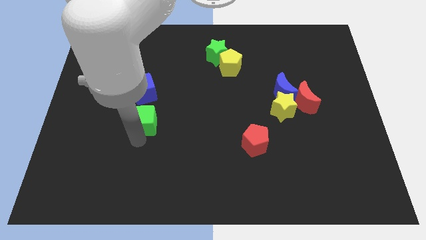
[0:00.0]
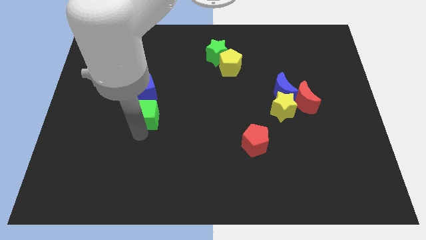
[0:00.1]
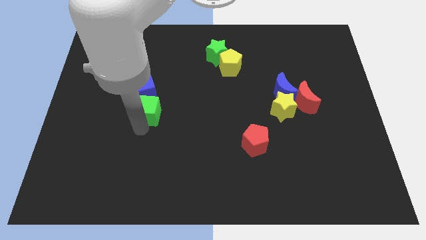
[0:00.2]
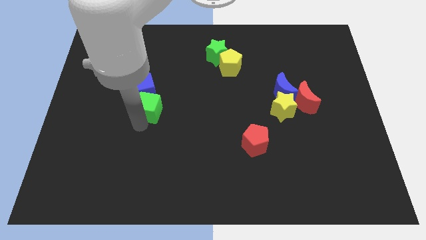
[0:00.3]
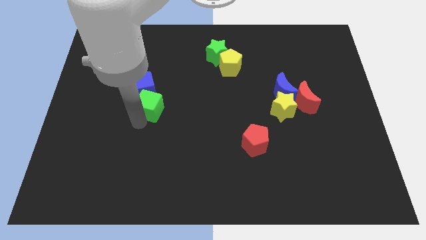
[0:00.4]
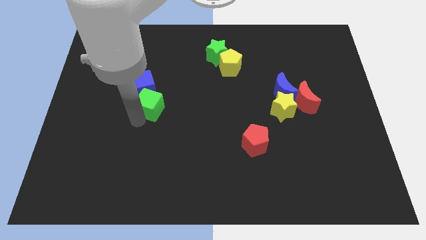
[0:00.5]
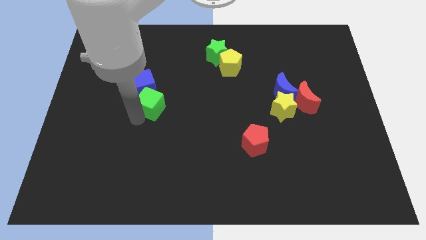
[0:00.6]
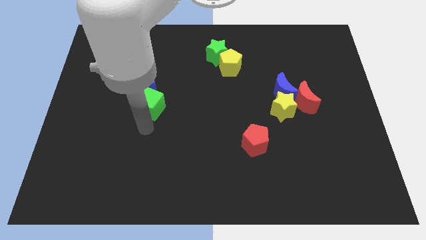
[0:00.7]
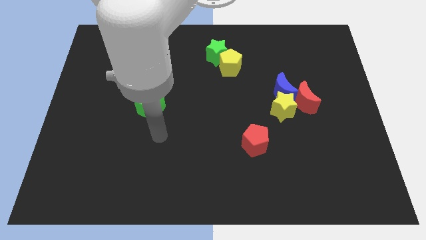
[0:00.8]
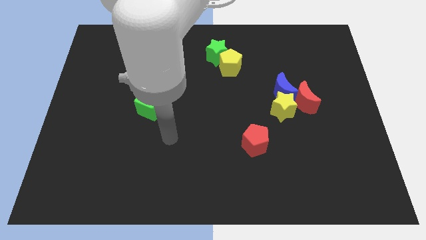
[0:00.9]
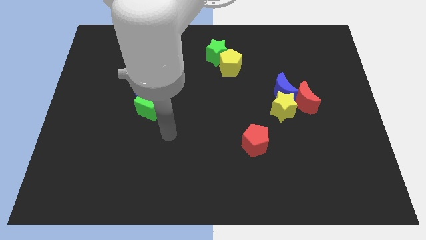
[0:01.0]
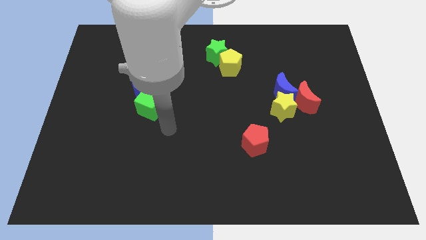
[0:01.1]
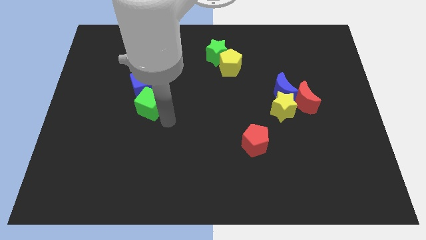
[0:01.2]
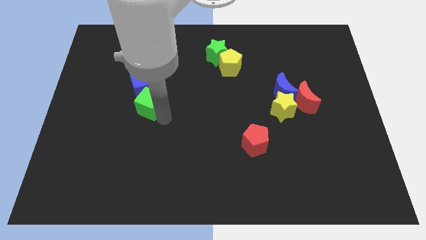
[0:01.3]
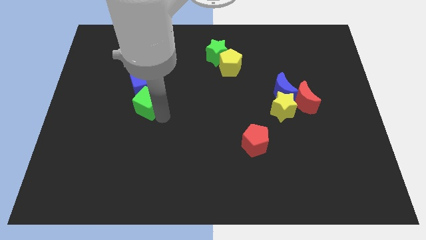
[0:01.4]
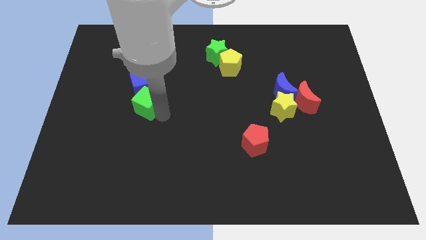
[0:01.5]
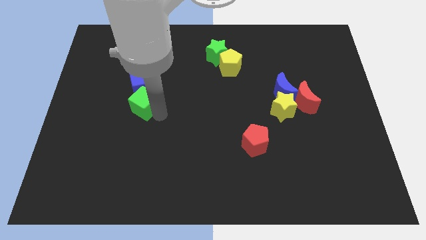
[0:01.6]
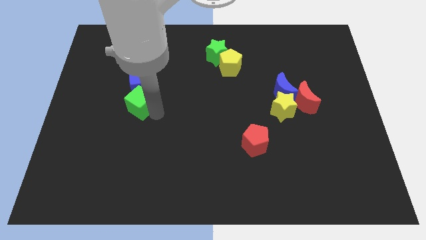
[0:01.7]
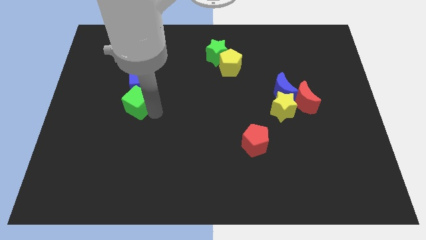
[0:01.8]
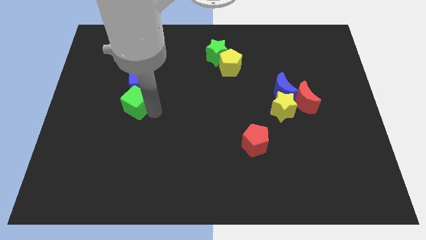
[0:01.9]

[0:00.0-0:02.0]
push the green cube towards the blue cube

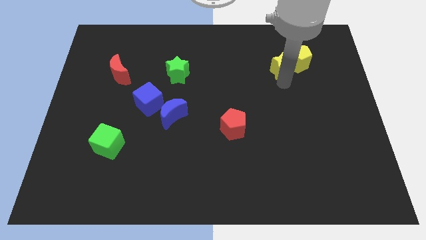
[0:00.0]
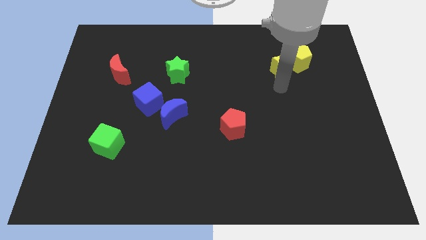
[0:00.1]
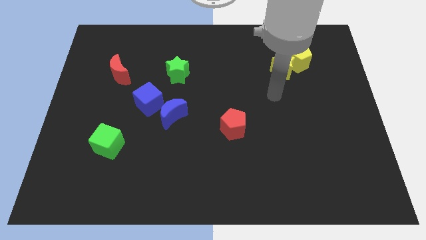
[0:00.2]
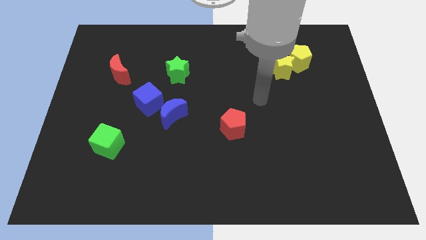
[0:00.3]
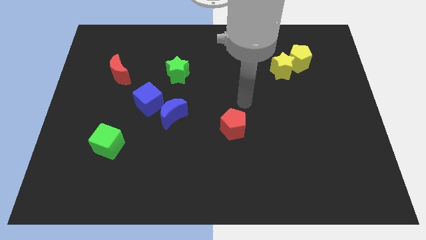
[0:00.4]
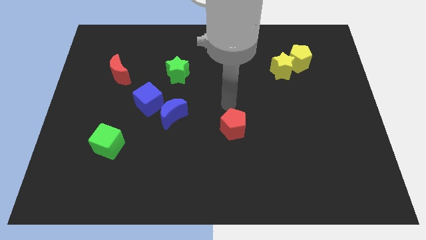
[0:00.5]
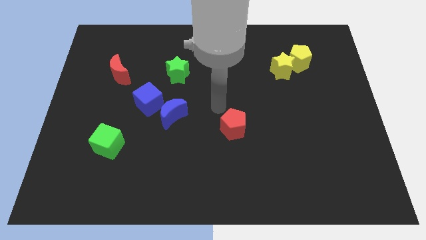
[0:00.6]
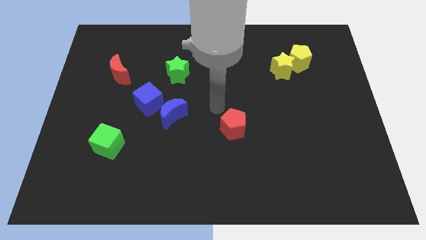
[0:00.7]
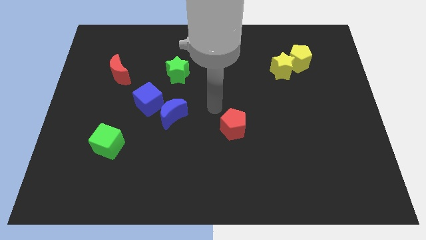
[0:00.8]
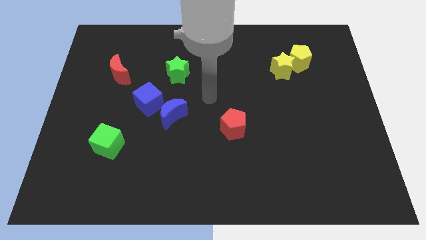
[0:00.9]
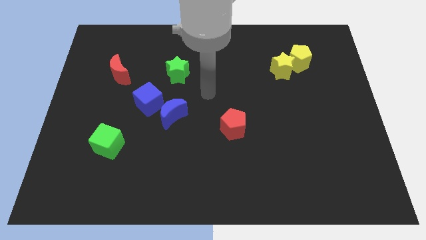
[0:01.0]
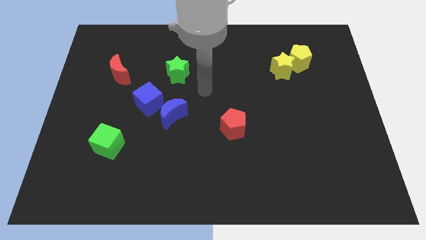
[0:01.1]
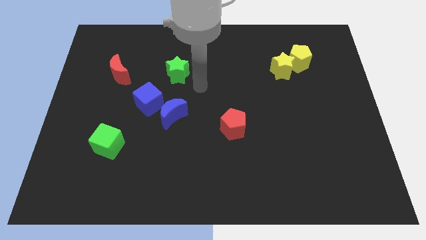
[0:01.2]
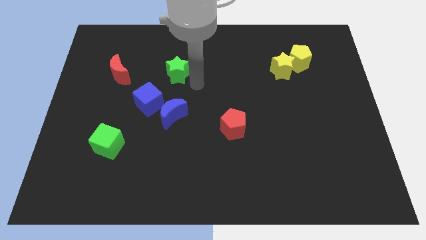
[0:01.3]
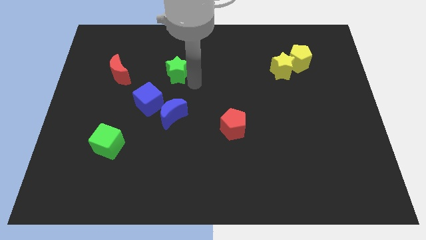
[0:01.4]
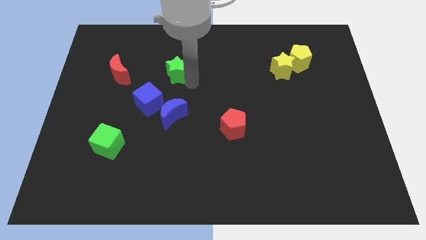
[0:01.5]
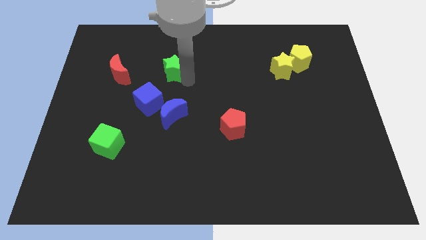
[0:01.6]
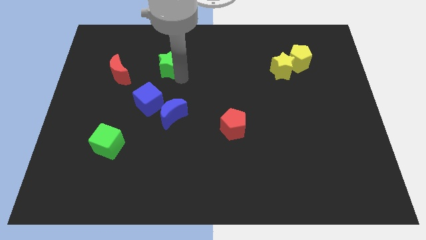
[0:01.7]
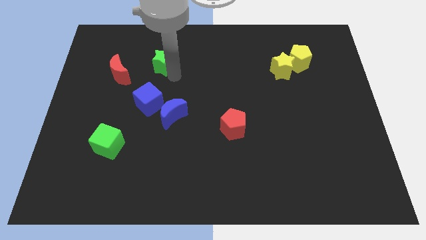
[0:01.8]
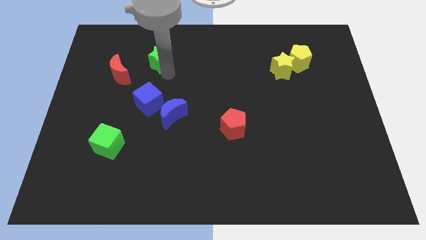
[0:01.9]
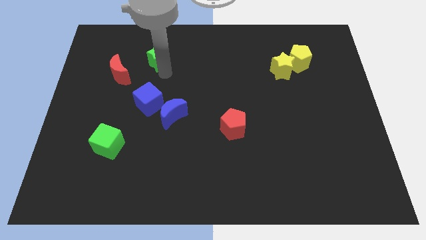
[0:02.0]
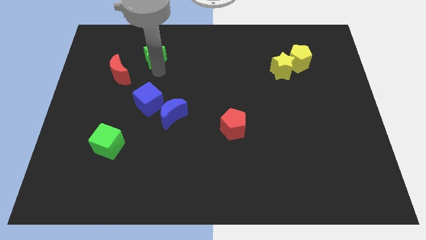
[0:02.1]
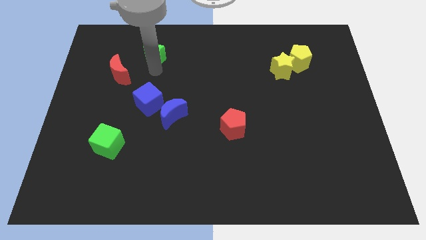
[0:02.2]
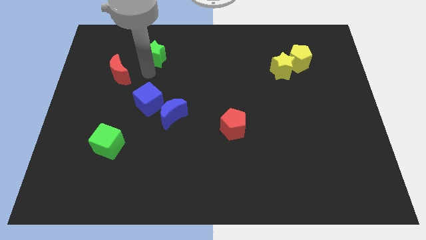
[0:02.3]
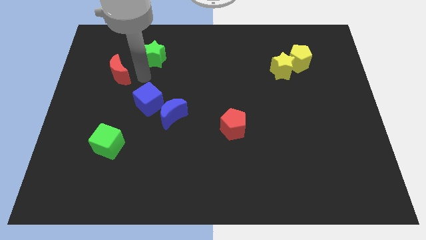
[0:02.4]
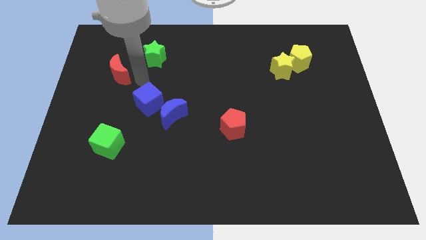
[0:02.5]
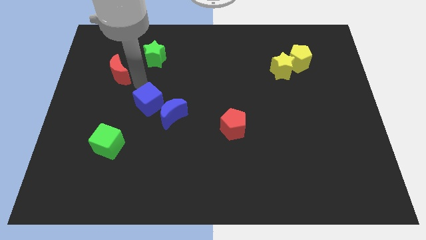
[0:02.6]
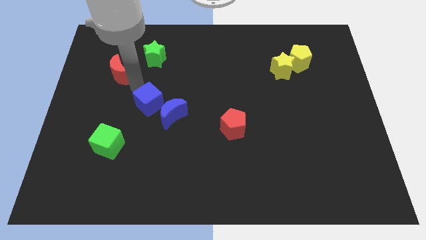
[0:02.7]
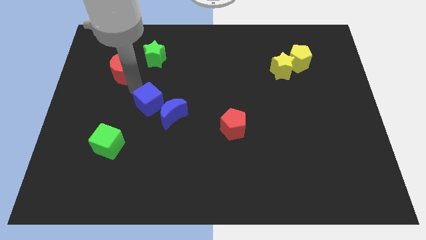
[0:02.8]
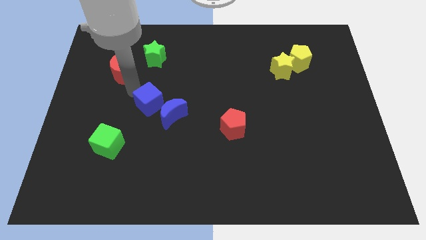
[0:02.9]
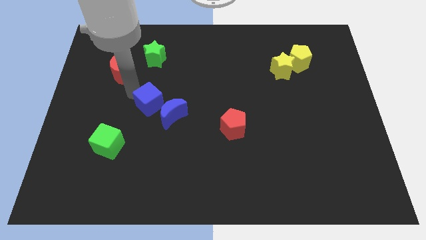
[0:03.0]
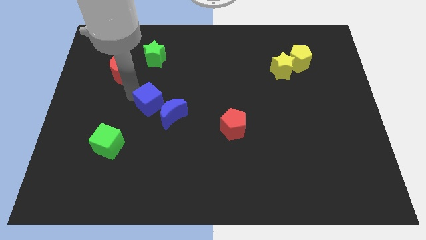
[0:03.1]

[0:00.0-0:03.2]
place the green star vertically above the top side of the blue cube

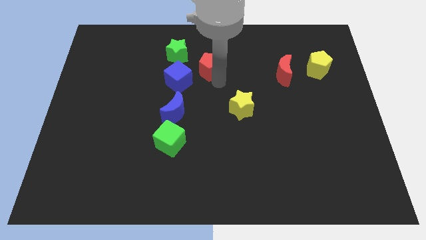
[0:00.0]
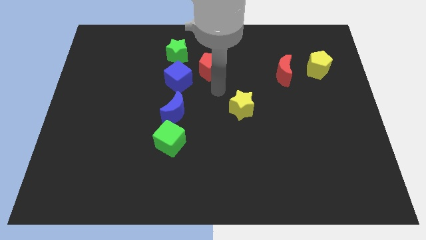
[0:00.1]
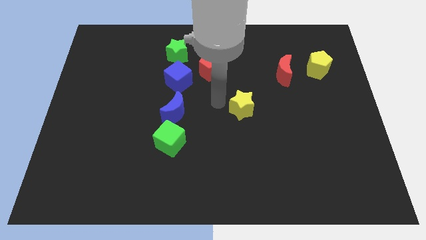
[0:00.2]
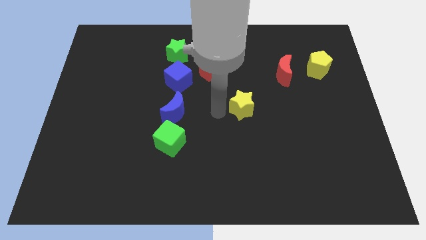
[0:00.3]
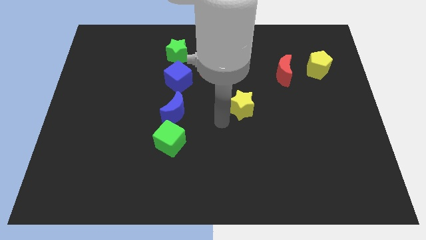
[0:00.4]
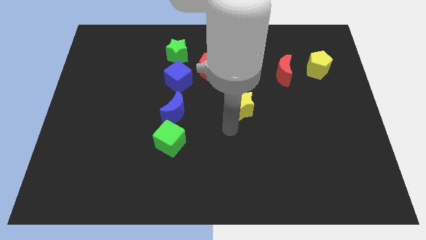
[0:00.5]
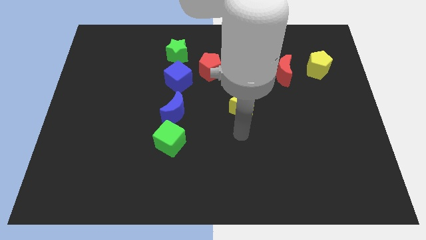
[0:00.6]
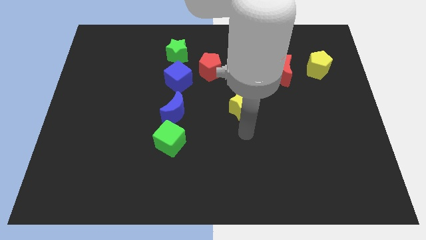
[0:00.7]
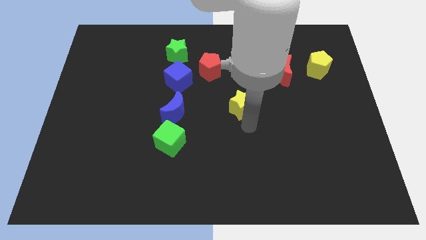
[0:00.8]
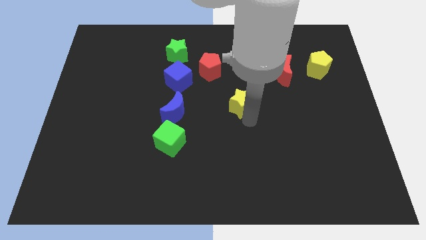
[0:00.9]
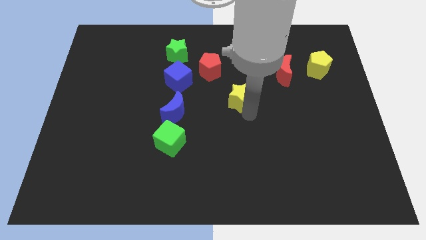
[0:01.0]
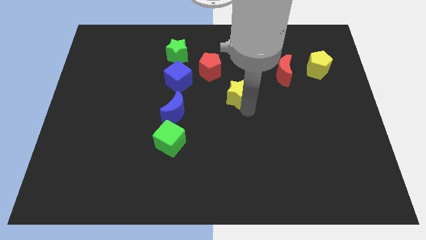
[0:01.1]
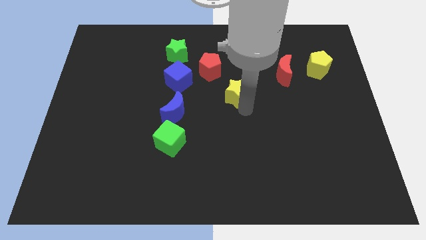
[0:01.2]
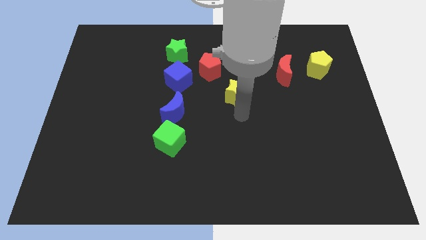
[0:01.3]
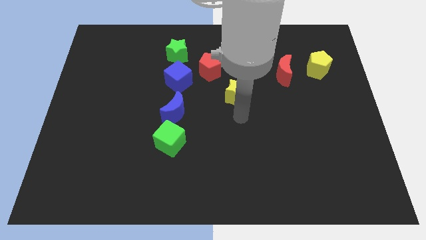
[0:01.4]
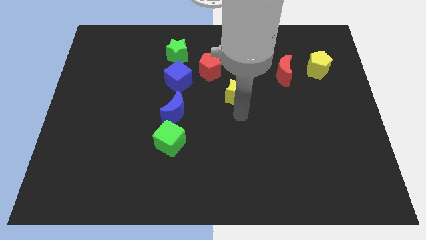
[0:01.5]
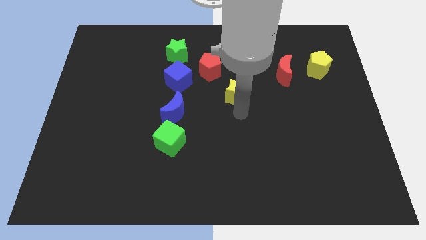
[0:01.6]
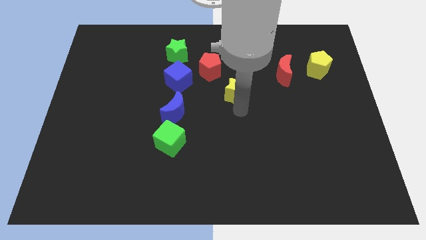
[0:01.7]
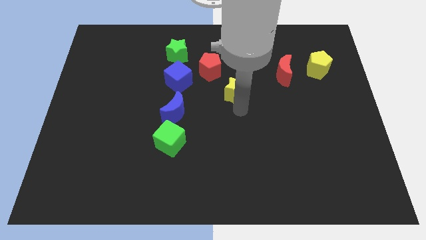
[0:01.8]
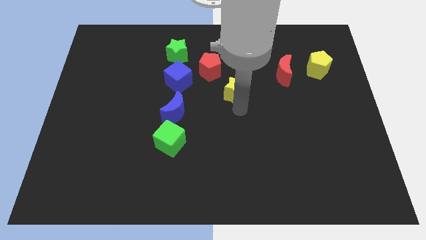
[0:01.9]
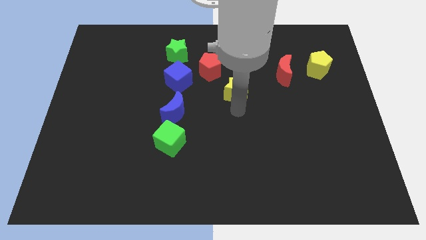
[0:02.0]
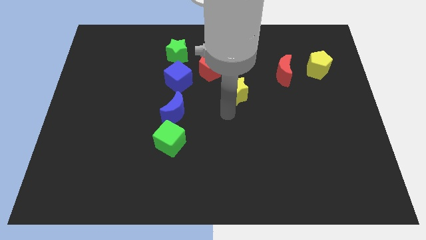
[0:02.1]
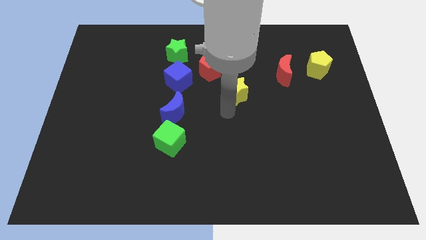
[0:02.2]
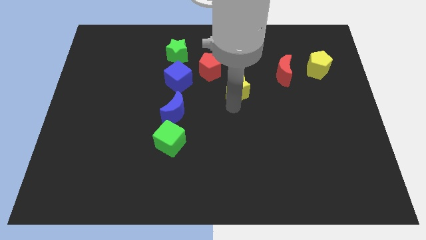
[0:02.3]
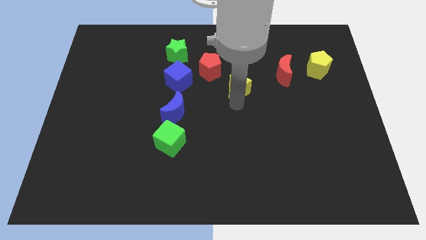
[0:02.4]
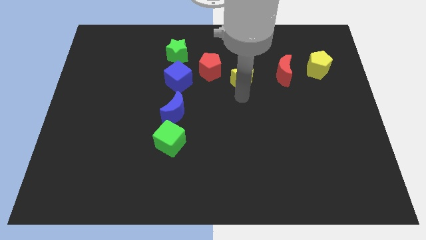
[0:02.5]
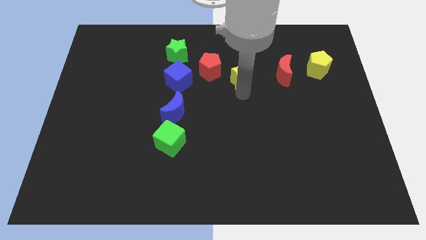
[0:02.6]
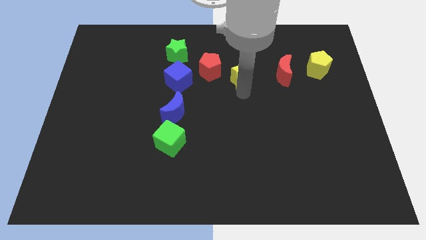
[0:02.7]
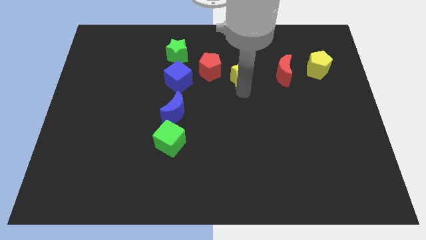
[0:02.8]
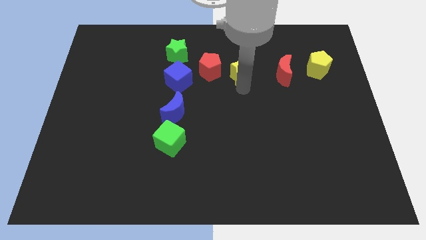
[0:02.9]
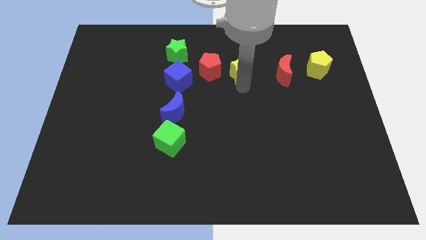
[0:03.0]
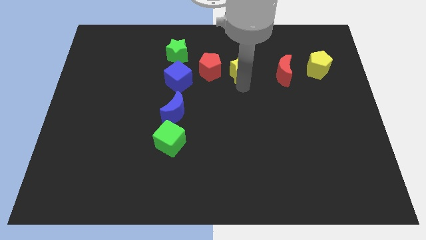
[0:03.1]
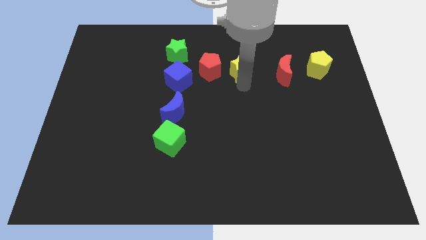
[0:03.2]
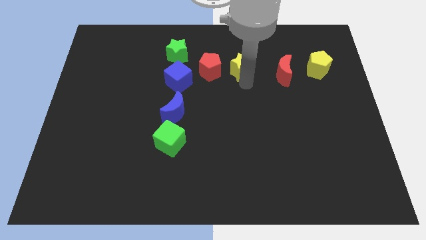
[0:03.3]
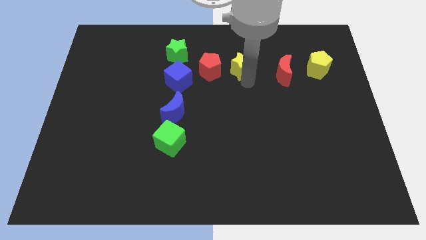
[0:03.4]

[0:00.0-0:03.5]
push the yellow star to the right of the red pentagon

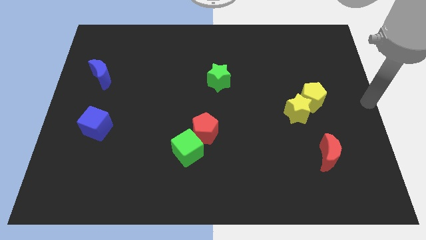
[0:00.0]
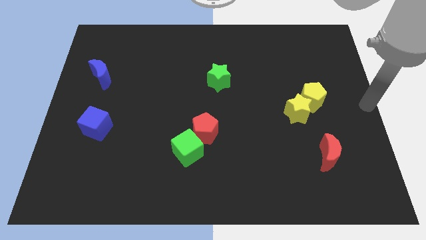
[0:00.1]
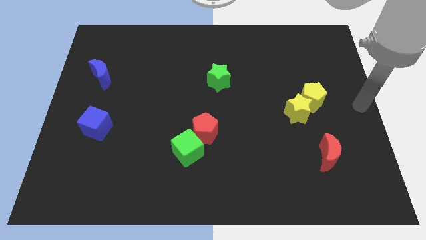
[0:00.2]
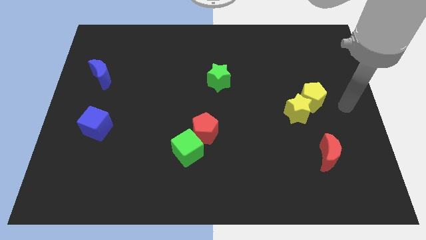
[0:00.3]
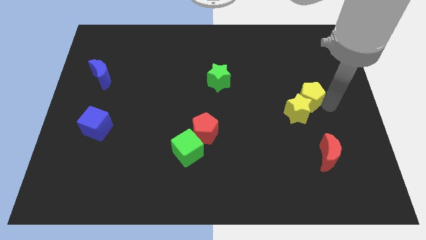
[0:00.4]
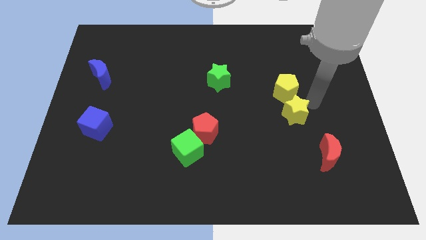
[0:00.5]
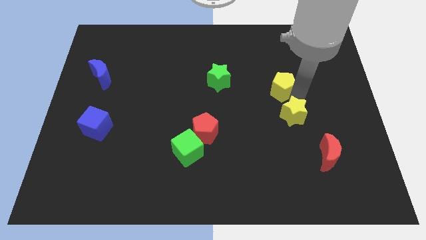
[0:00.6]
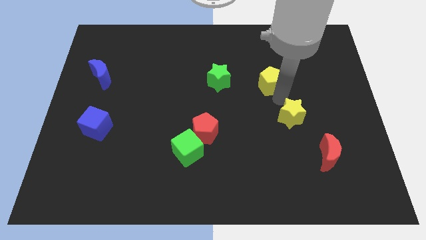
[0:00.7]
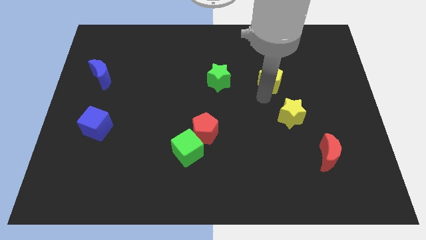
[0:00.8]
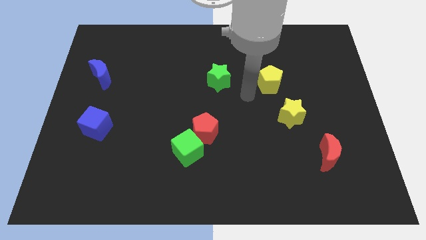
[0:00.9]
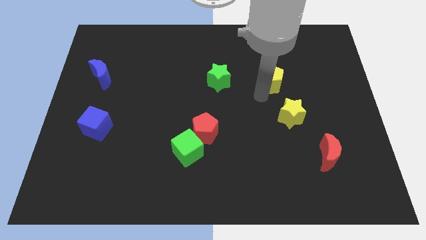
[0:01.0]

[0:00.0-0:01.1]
place the yellow pentagon parallel to green star
